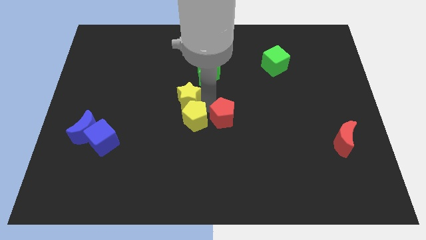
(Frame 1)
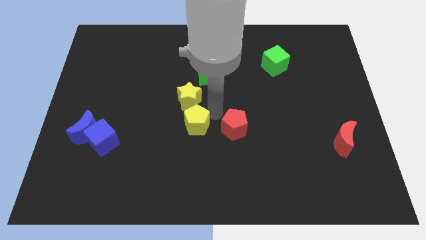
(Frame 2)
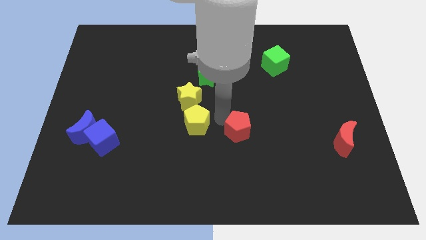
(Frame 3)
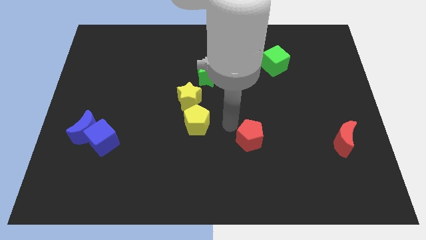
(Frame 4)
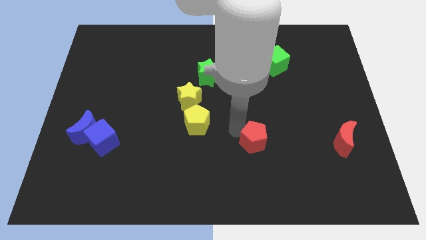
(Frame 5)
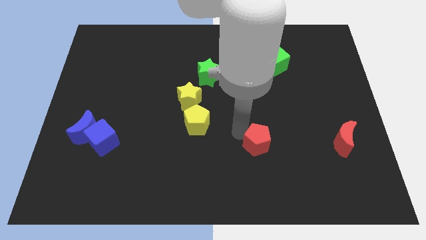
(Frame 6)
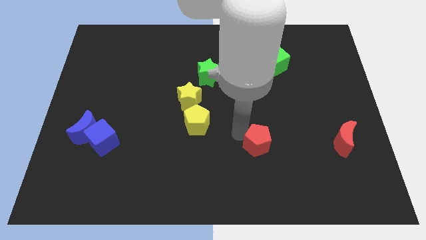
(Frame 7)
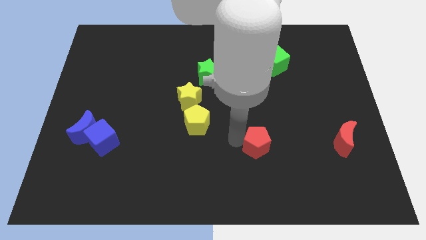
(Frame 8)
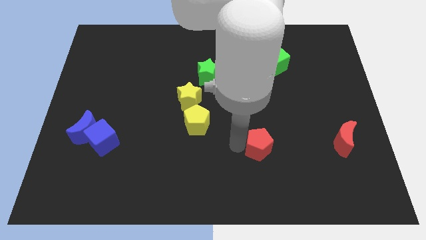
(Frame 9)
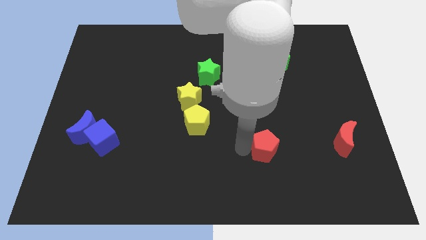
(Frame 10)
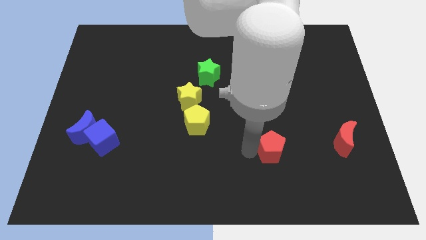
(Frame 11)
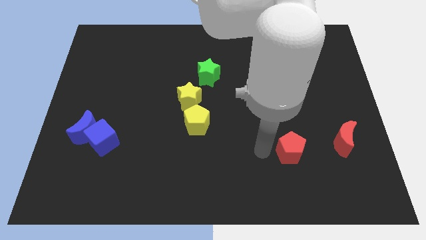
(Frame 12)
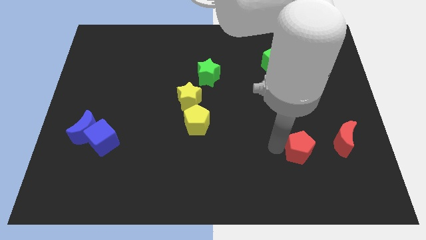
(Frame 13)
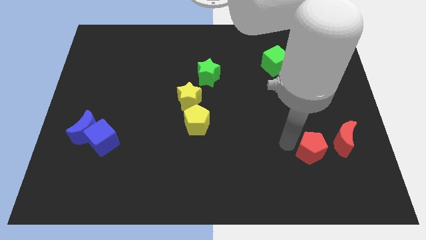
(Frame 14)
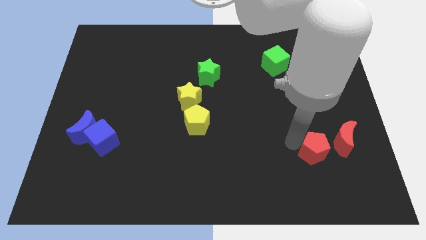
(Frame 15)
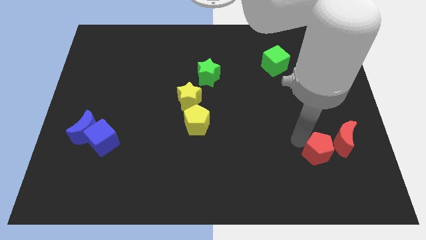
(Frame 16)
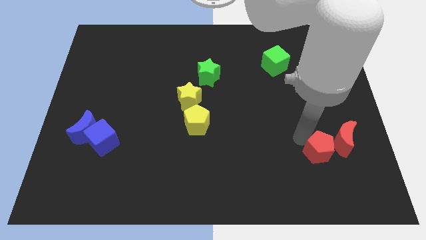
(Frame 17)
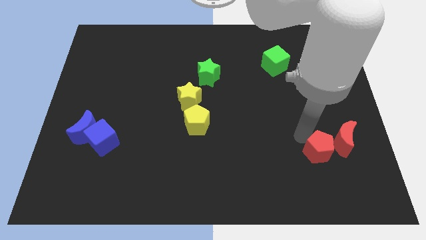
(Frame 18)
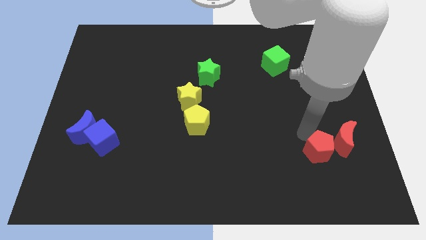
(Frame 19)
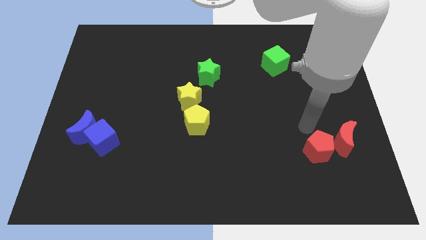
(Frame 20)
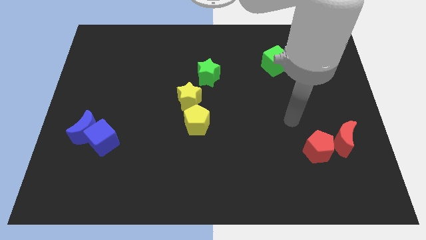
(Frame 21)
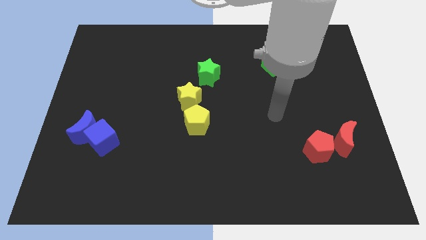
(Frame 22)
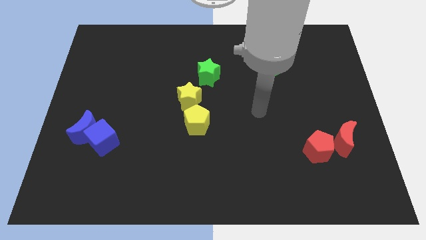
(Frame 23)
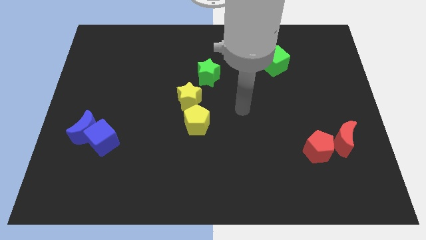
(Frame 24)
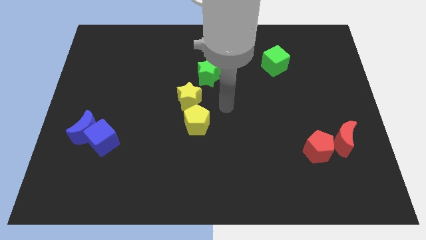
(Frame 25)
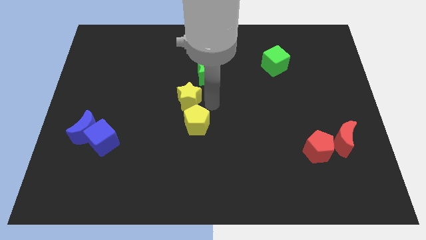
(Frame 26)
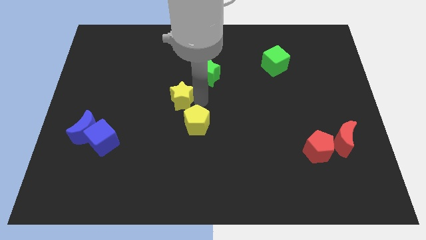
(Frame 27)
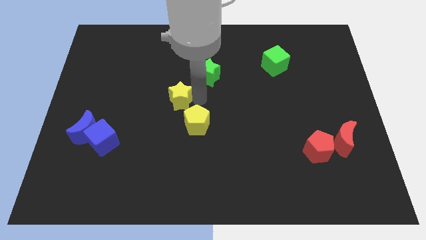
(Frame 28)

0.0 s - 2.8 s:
push red pentagon into red moon

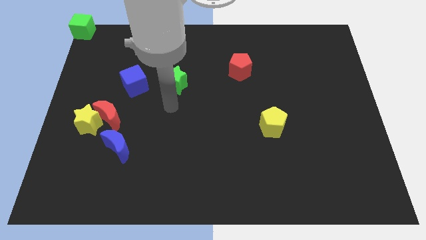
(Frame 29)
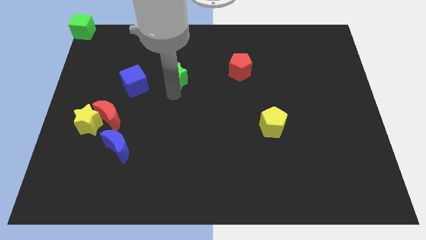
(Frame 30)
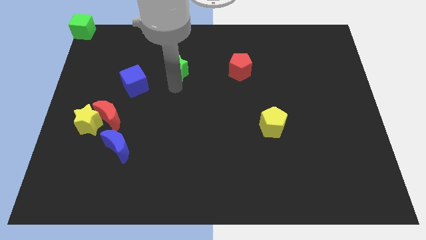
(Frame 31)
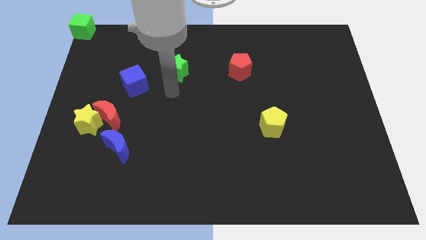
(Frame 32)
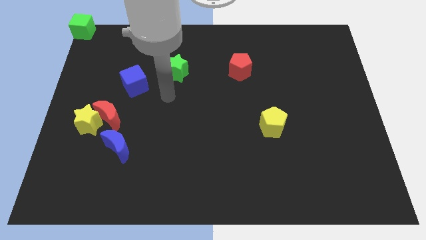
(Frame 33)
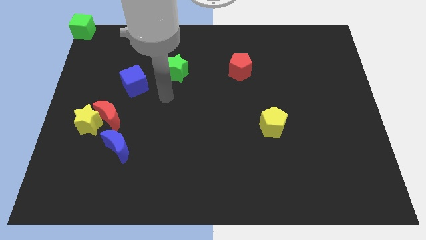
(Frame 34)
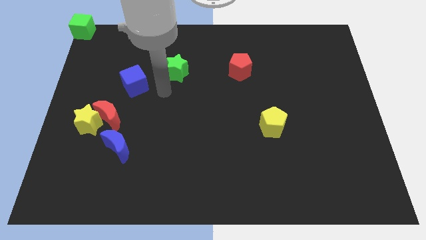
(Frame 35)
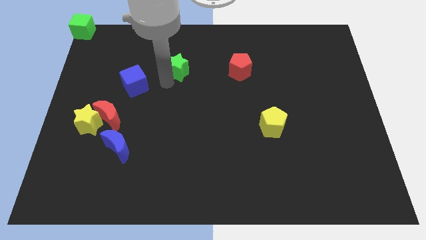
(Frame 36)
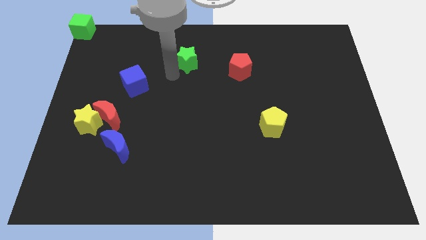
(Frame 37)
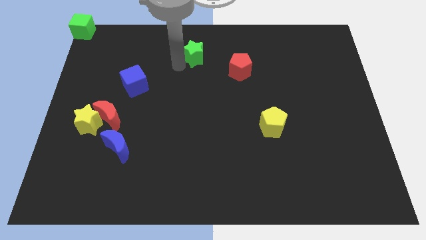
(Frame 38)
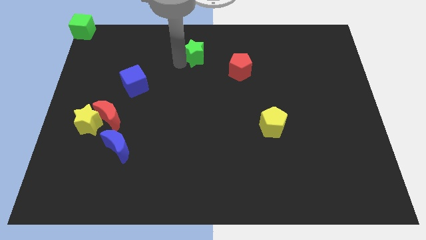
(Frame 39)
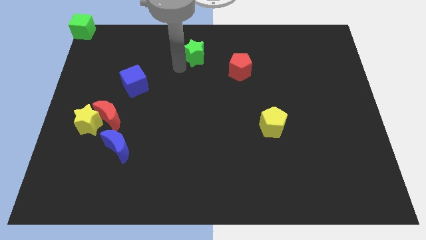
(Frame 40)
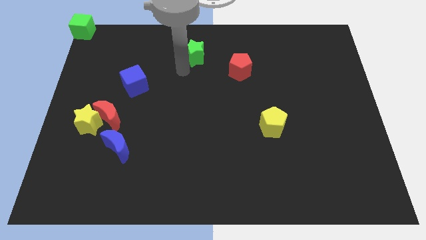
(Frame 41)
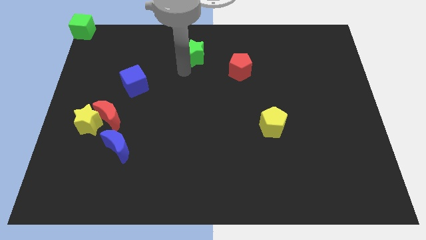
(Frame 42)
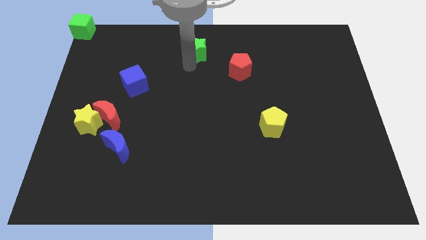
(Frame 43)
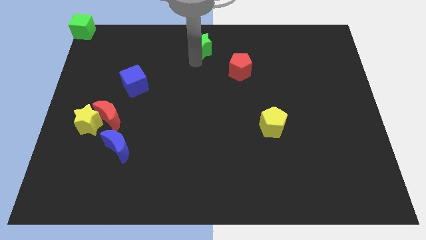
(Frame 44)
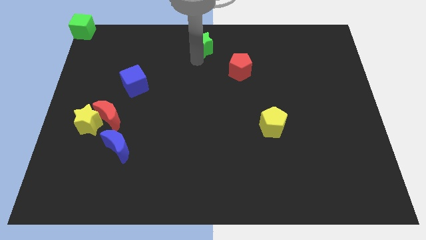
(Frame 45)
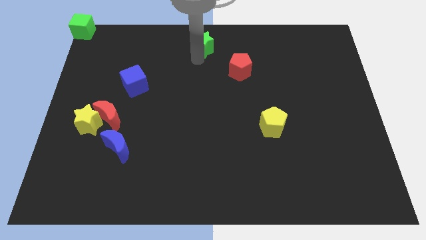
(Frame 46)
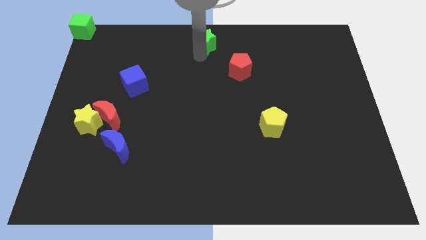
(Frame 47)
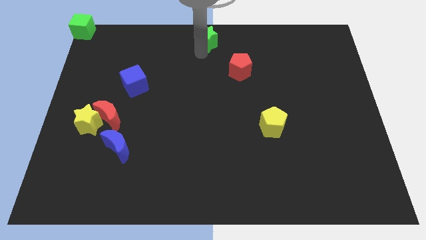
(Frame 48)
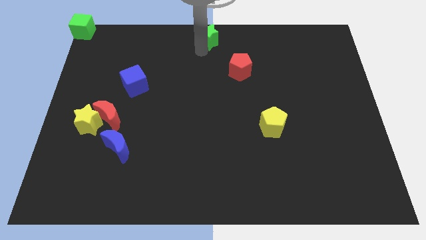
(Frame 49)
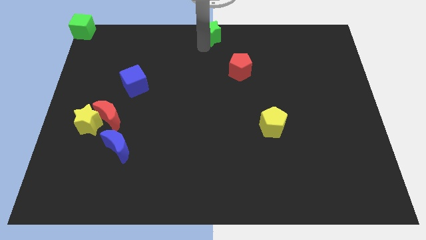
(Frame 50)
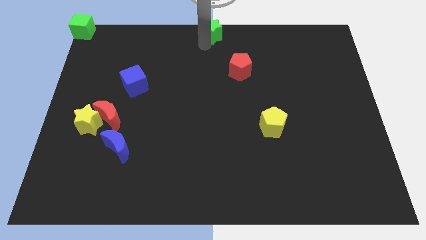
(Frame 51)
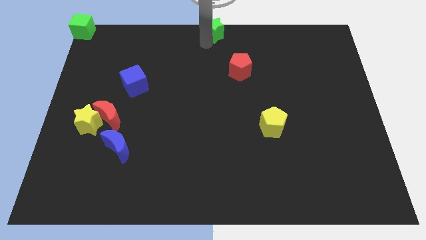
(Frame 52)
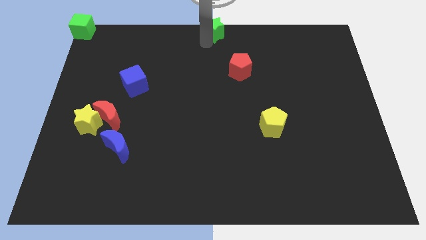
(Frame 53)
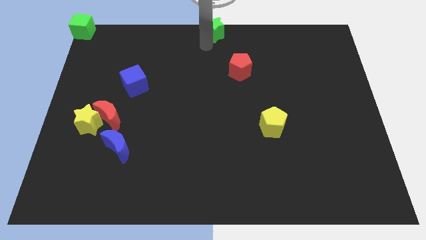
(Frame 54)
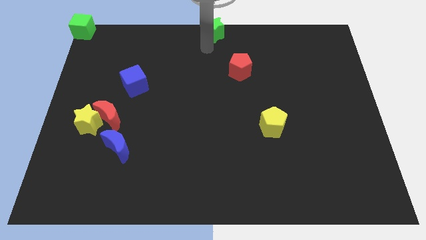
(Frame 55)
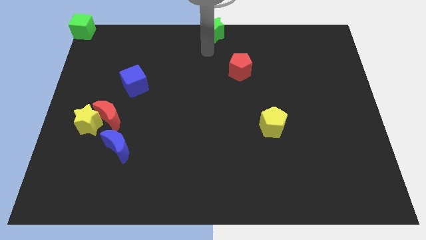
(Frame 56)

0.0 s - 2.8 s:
place the green star at top center of the board

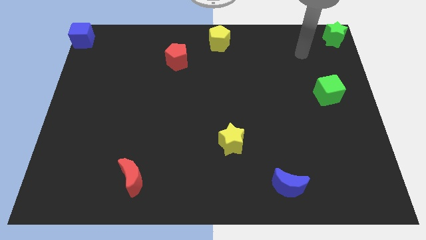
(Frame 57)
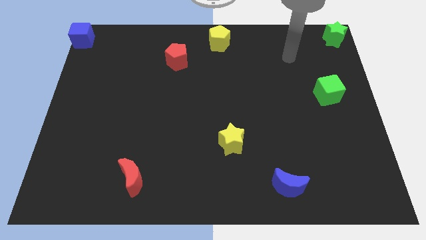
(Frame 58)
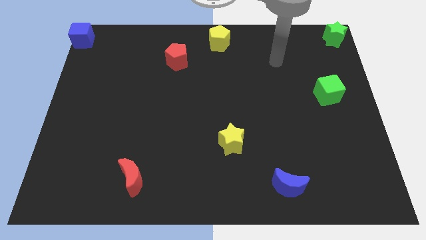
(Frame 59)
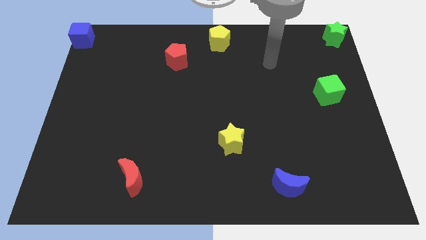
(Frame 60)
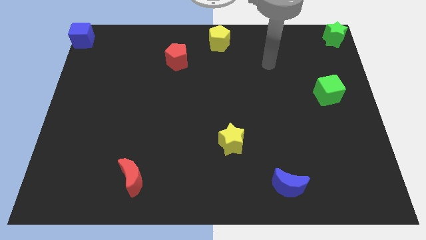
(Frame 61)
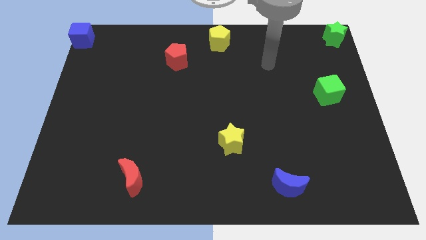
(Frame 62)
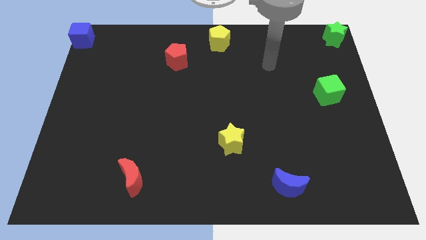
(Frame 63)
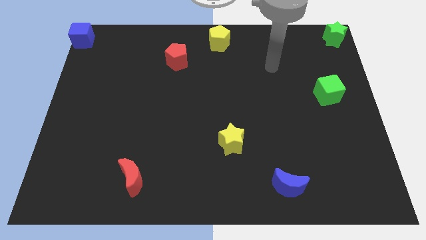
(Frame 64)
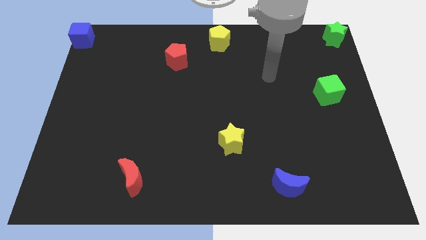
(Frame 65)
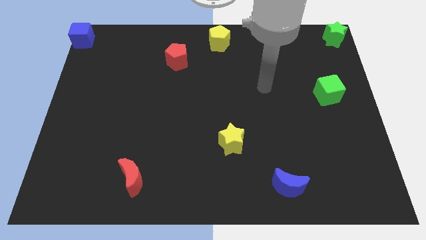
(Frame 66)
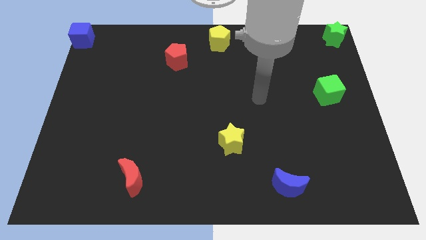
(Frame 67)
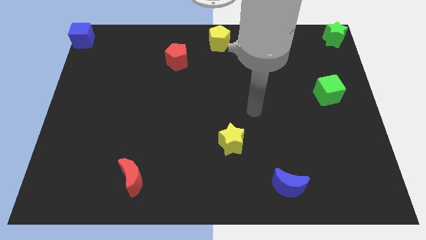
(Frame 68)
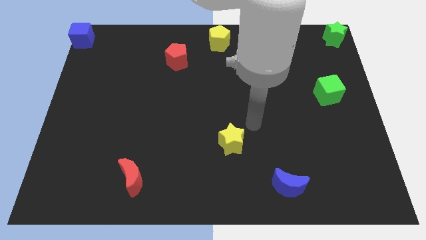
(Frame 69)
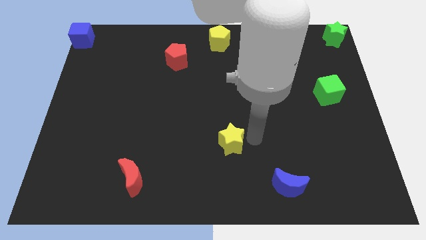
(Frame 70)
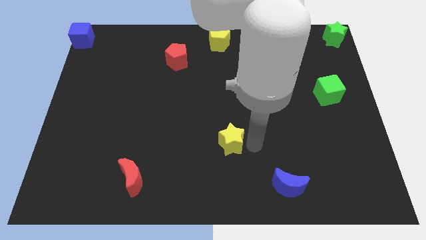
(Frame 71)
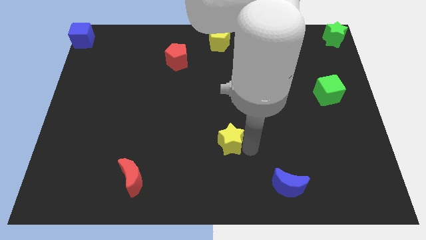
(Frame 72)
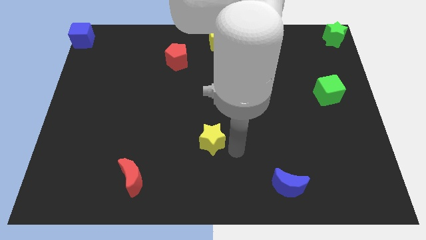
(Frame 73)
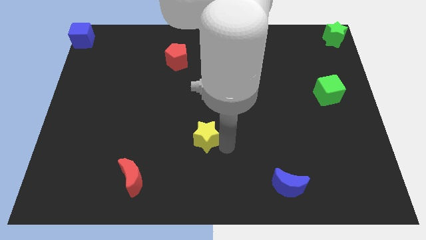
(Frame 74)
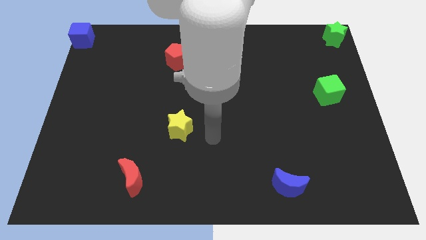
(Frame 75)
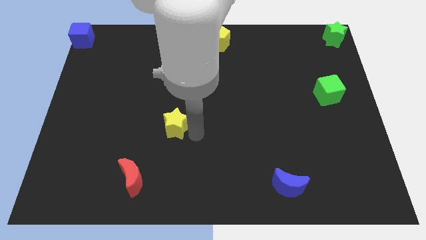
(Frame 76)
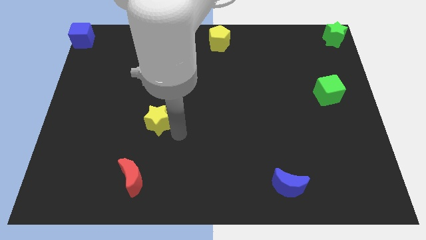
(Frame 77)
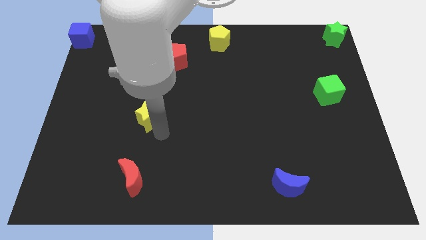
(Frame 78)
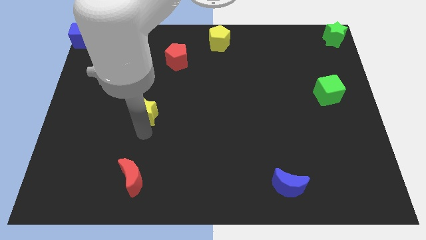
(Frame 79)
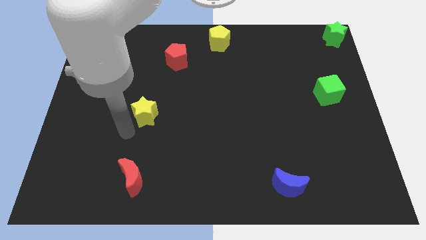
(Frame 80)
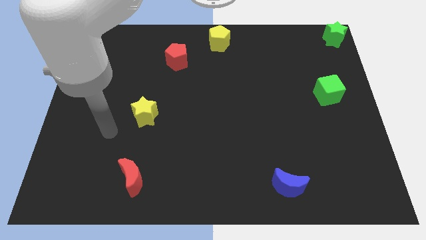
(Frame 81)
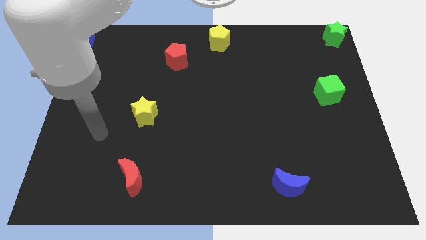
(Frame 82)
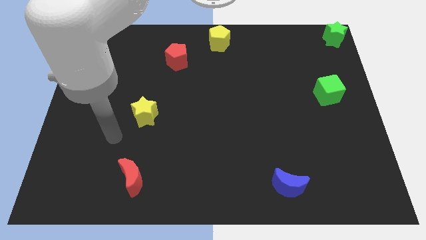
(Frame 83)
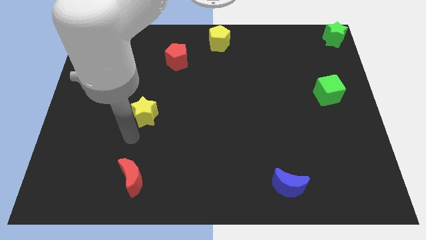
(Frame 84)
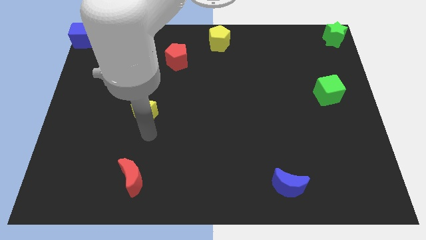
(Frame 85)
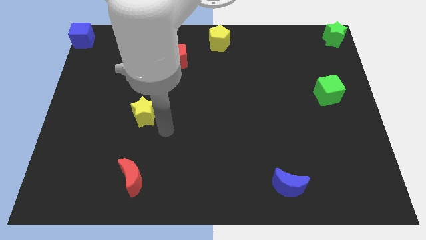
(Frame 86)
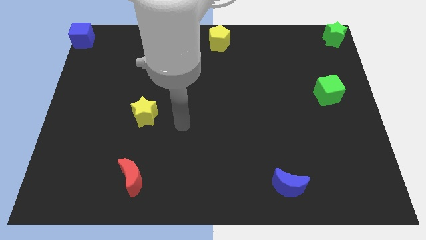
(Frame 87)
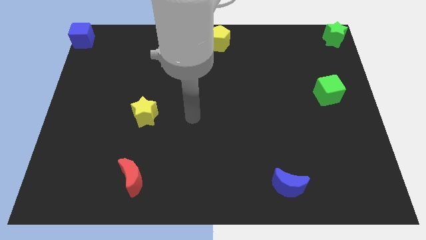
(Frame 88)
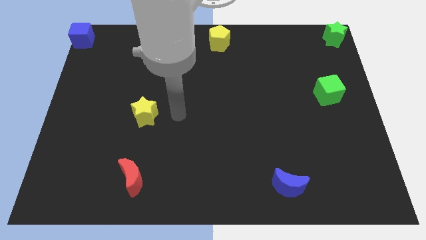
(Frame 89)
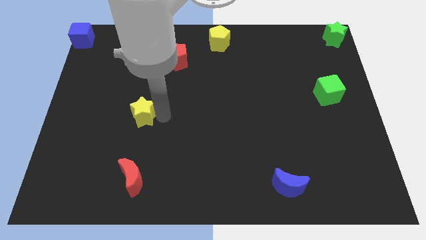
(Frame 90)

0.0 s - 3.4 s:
place the yellow star in between the red blocks
